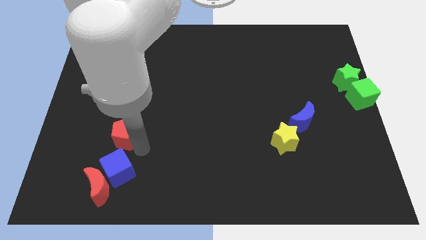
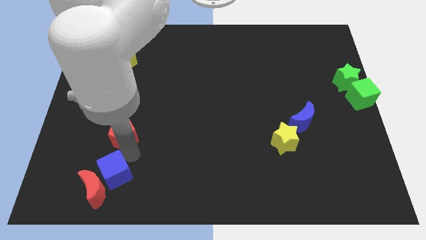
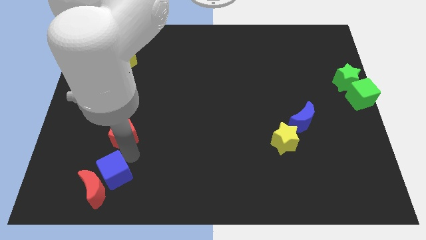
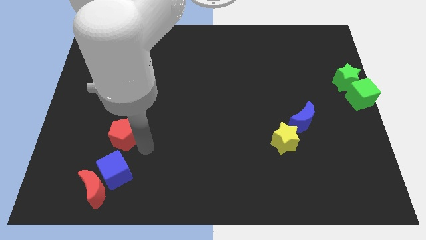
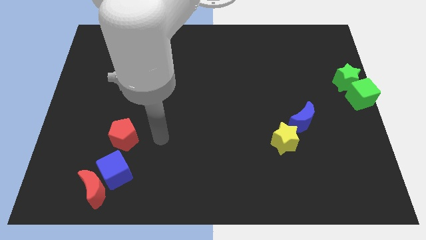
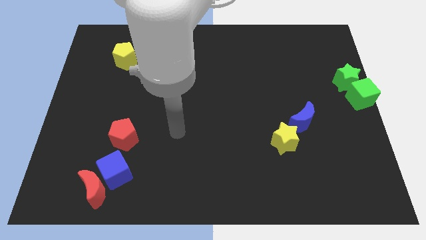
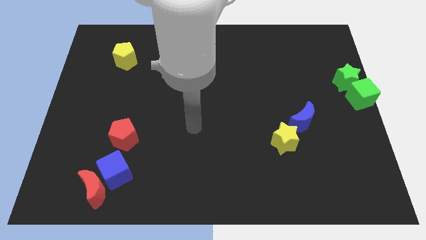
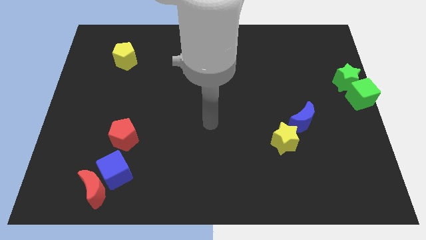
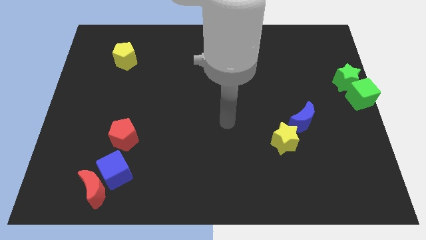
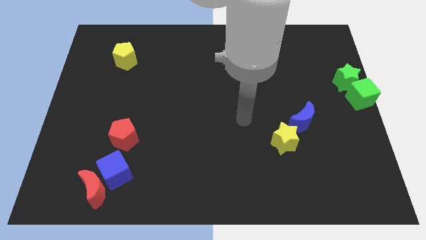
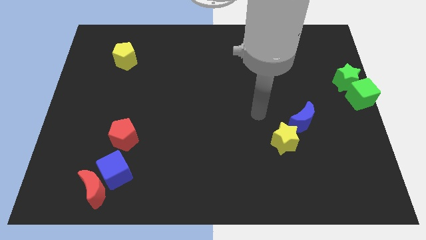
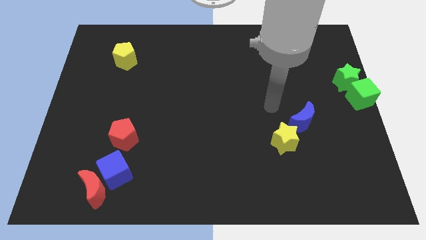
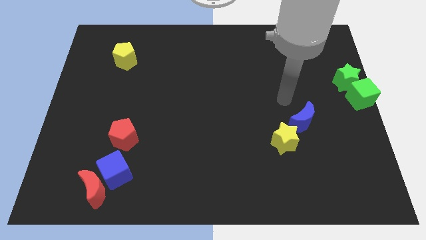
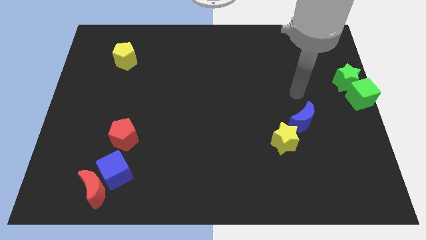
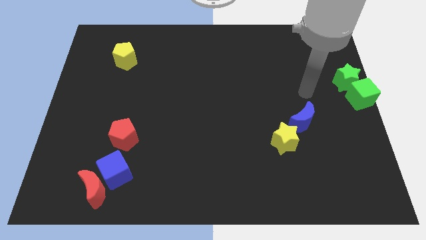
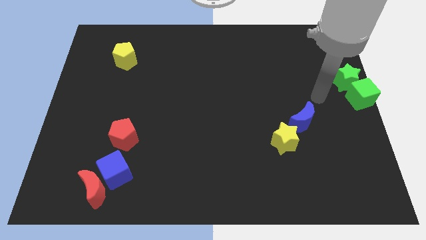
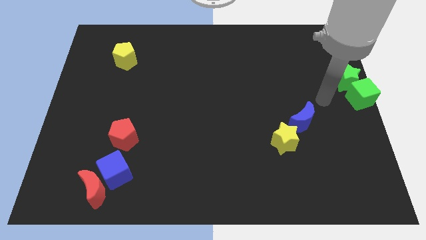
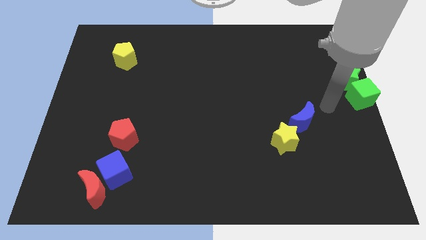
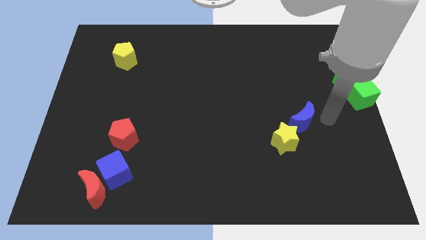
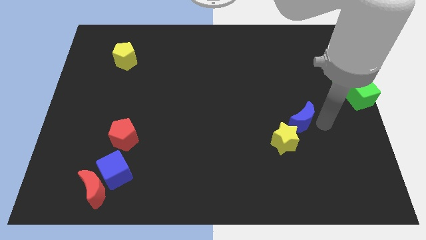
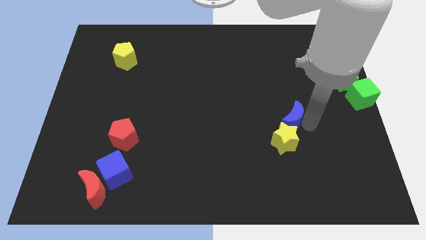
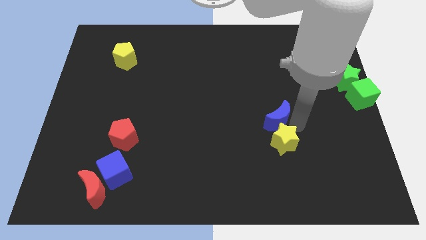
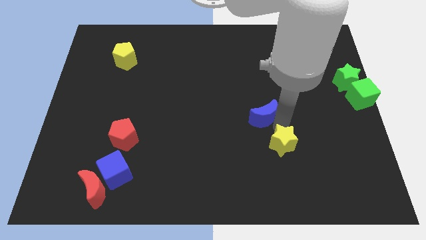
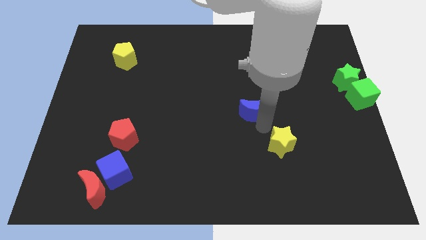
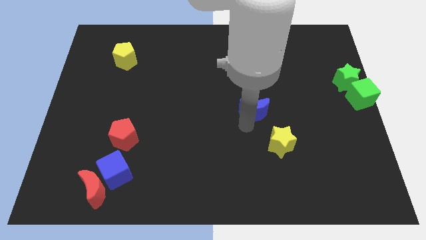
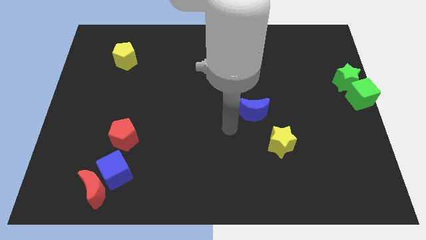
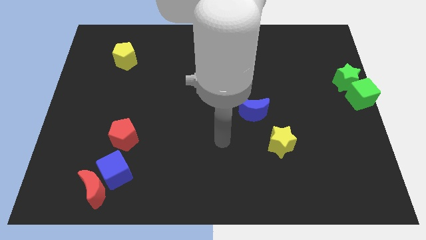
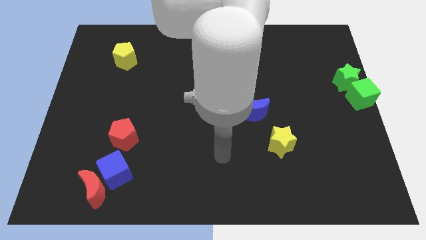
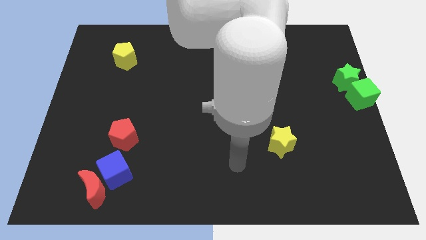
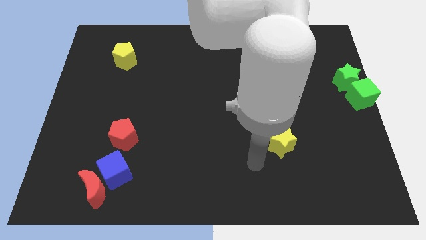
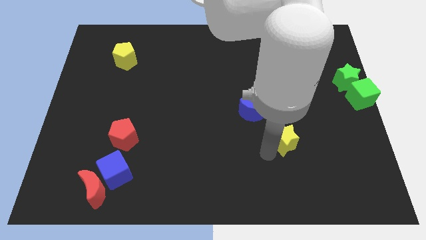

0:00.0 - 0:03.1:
separate the blue crescent from the yellow star

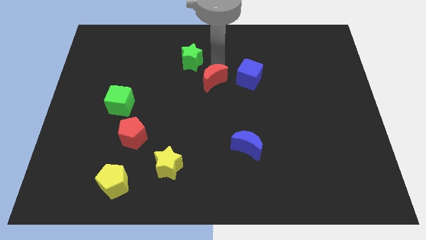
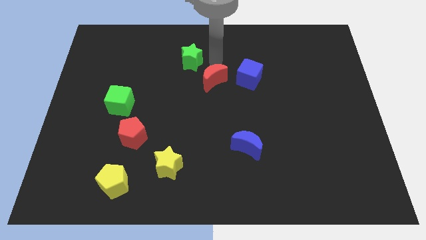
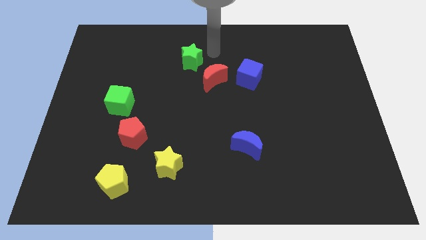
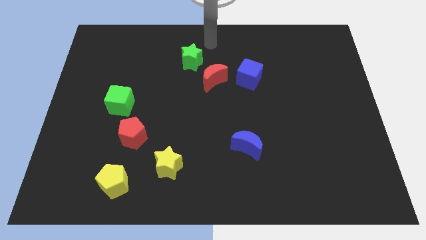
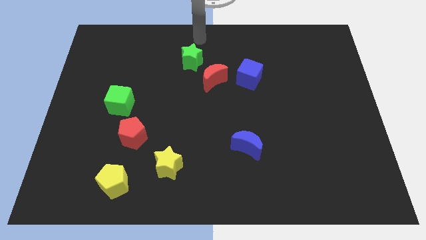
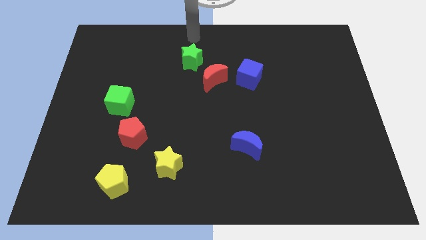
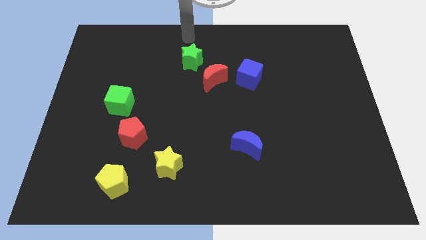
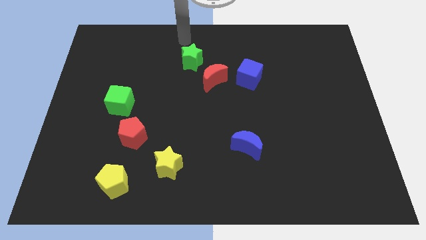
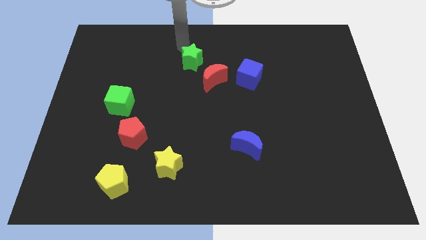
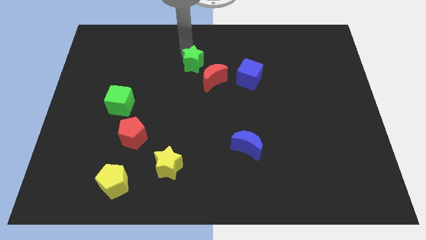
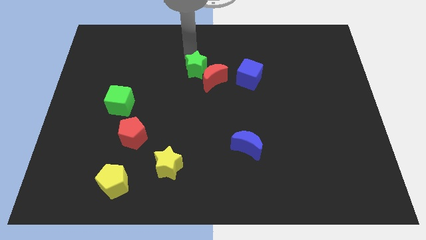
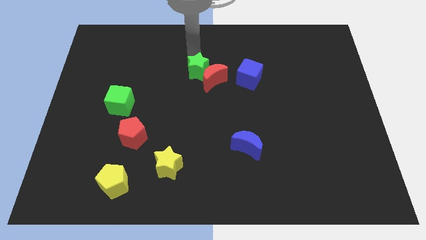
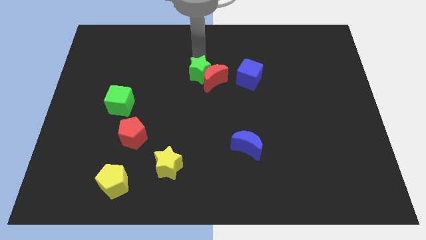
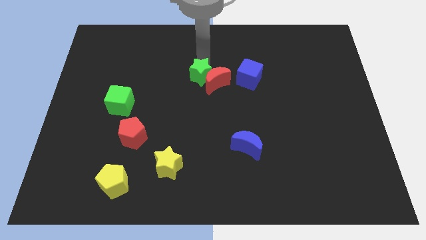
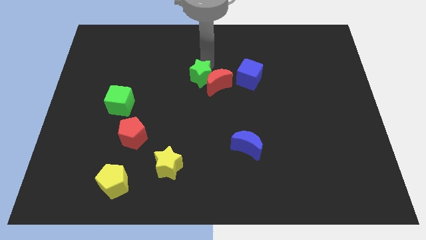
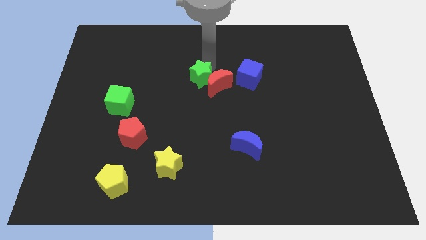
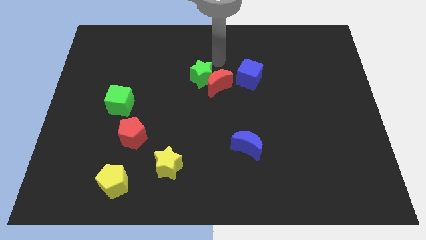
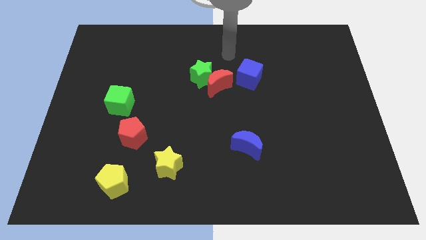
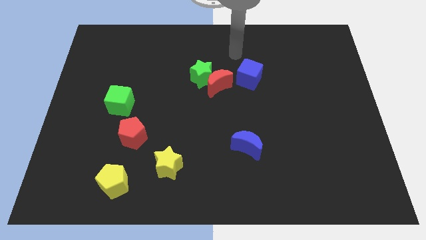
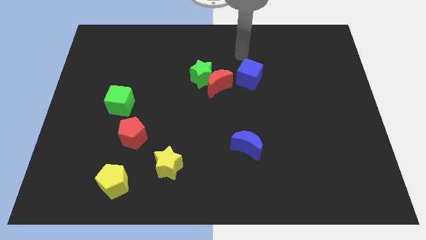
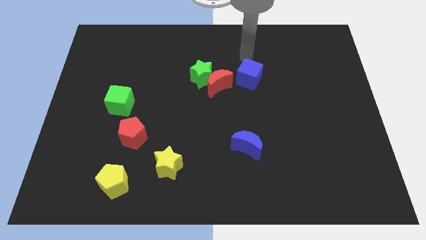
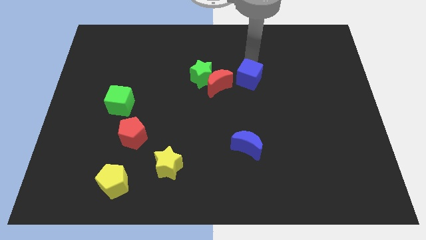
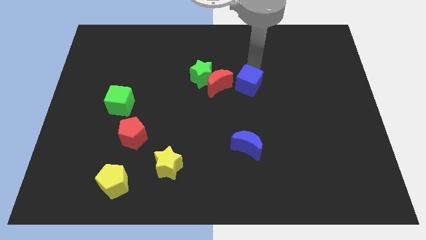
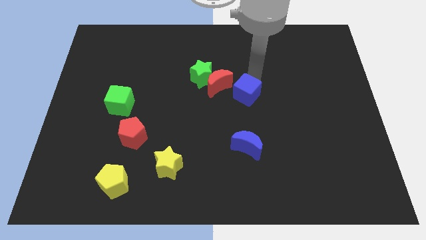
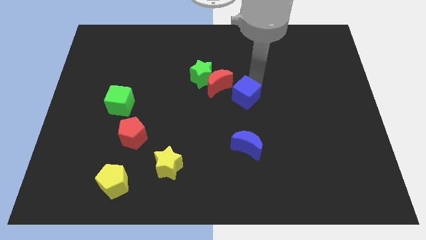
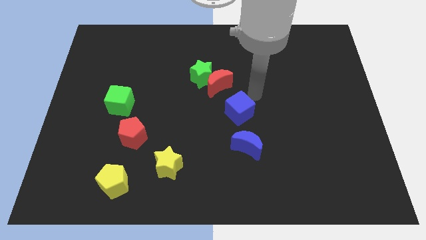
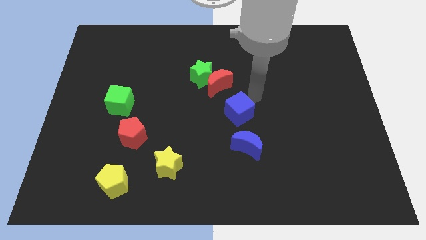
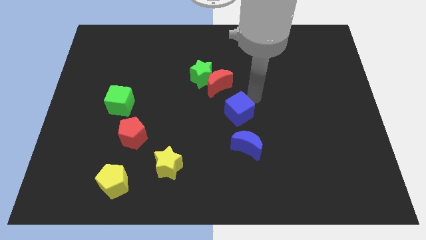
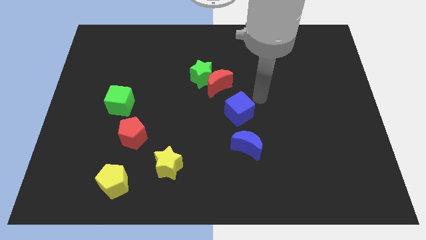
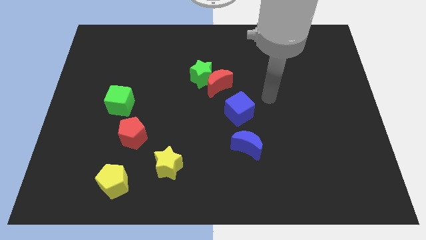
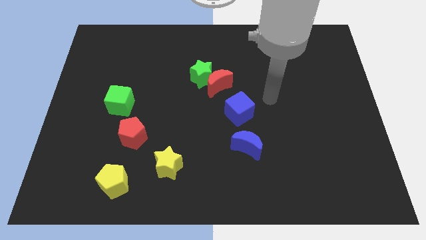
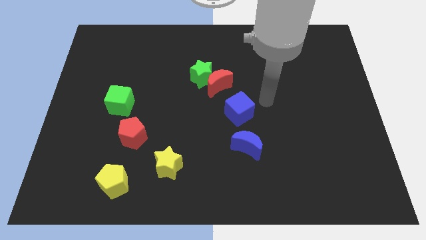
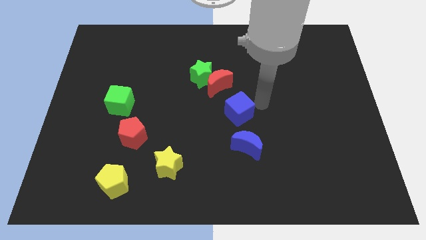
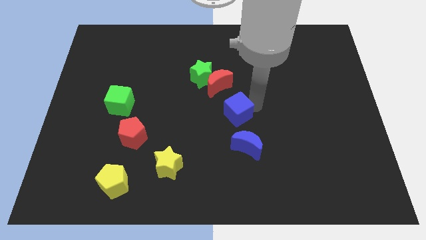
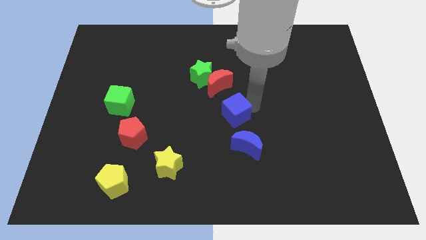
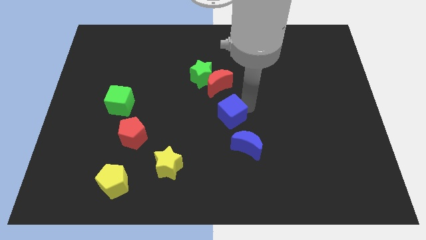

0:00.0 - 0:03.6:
place the blue cube in between red crescent and blue crescent

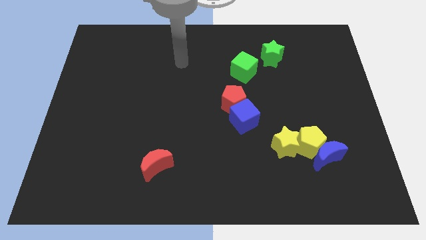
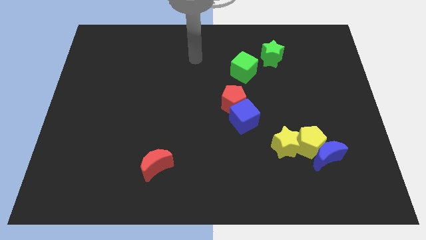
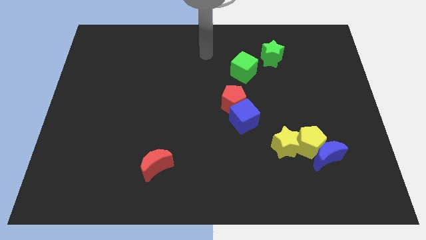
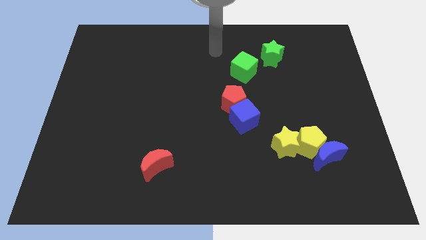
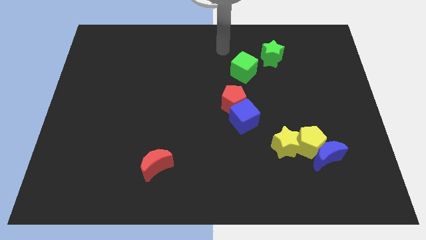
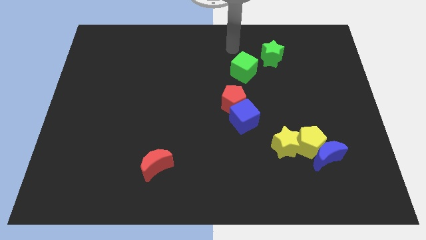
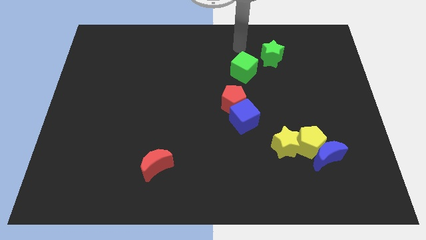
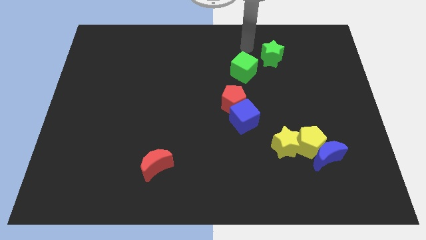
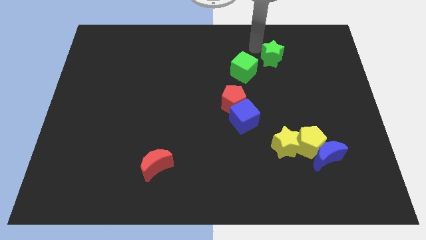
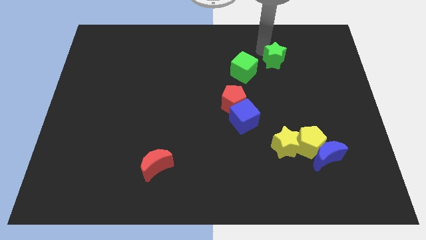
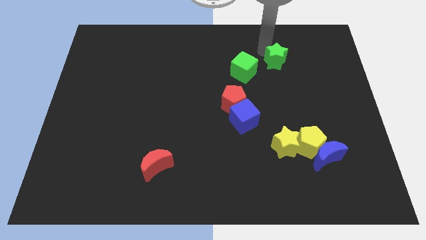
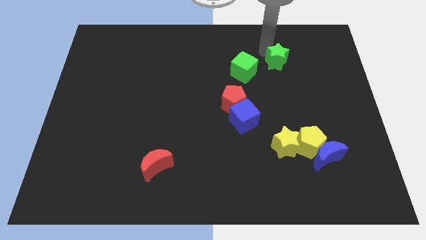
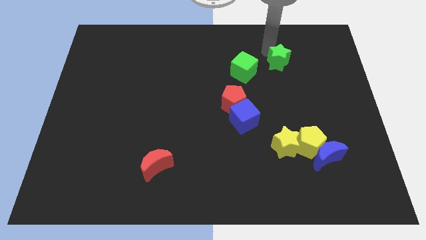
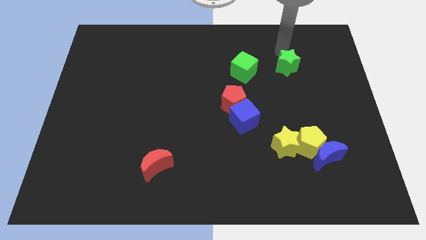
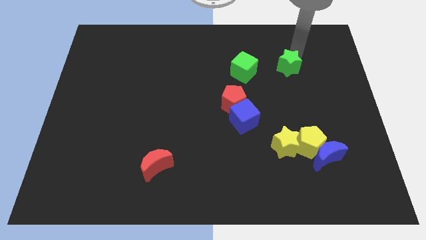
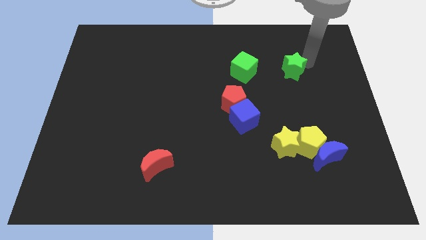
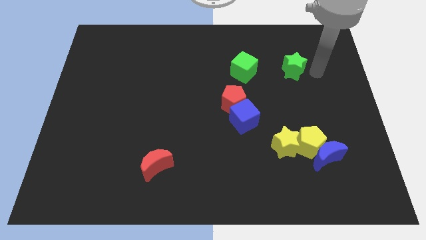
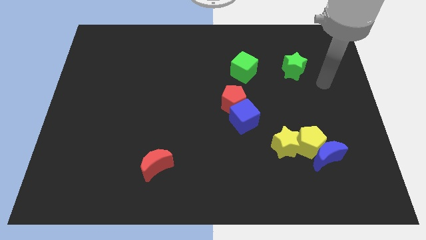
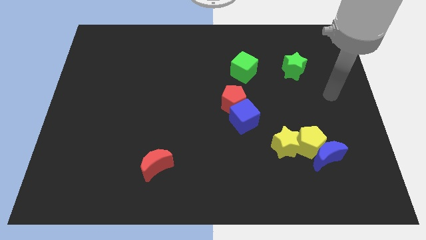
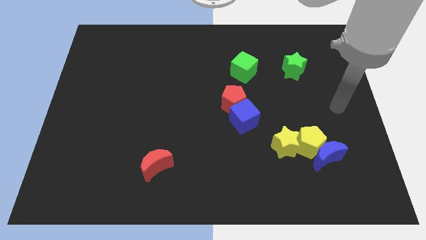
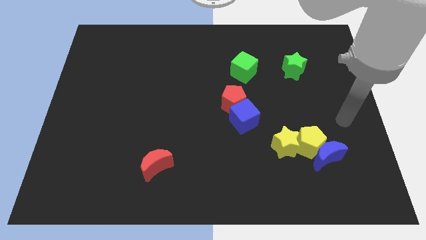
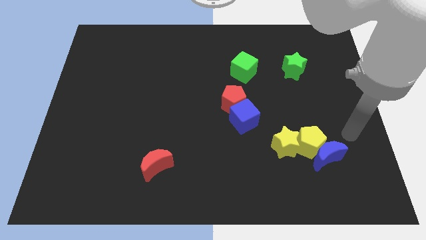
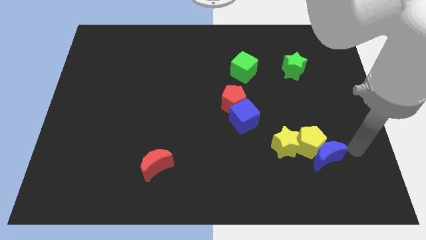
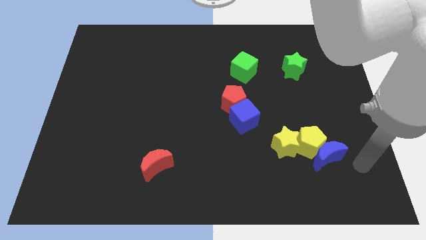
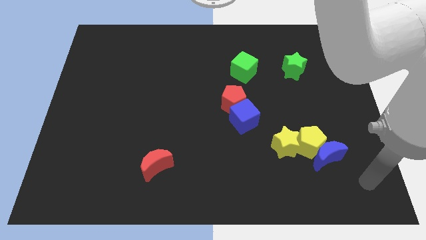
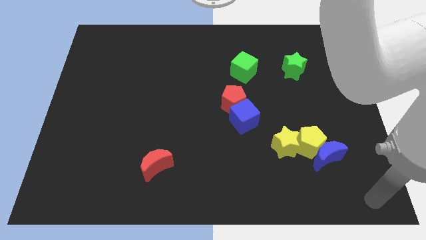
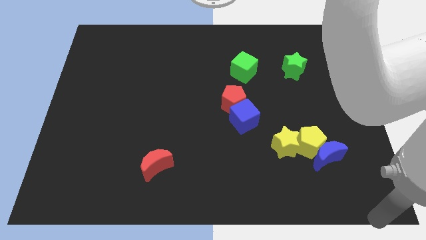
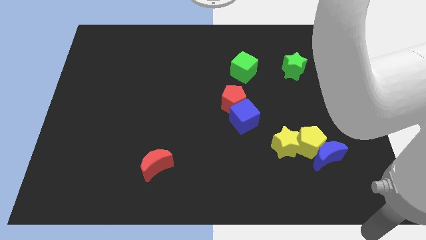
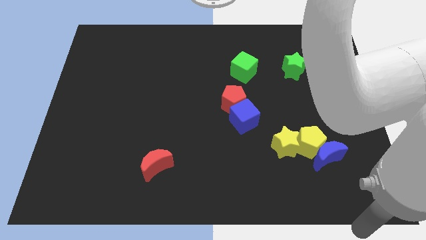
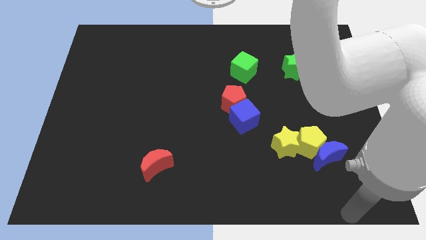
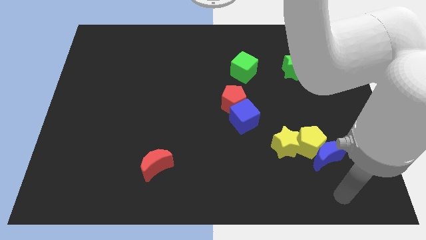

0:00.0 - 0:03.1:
place green star right to green cube
